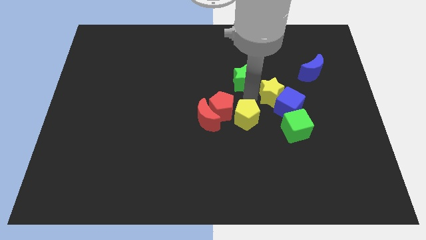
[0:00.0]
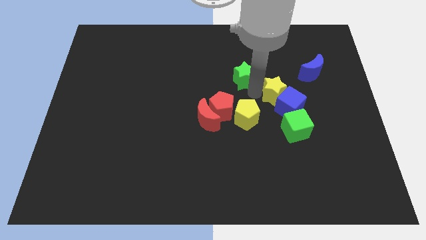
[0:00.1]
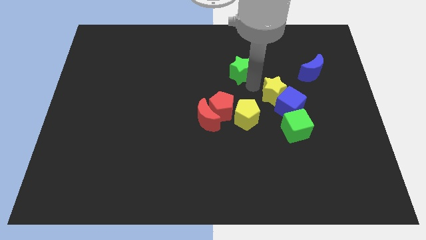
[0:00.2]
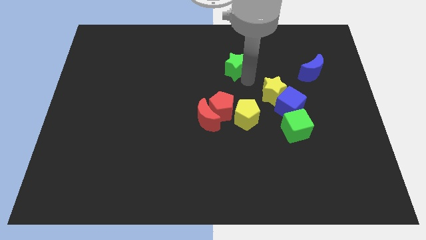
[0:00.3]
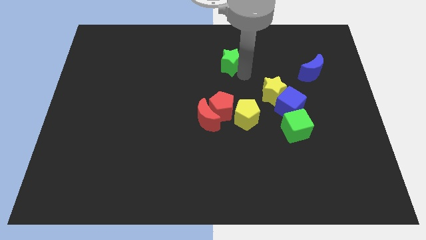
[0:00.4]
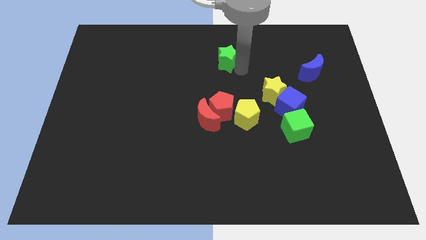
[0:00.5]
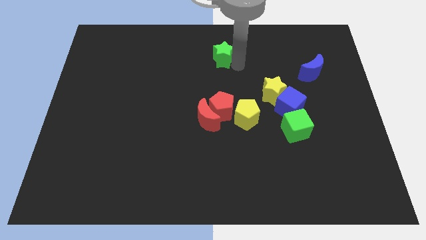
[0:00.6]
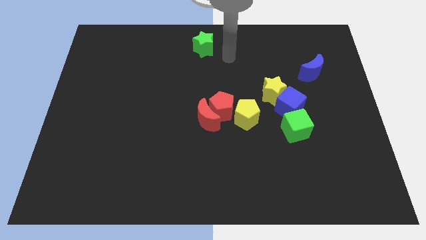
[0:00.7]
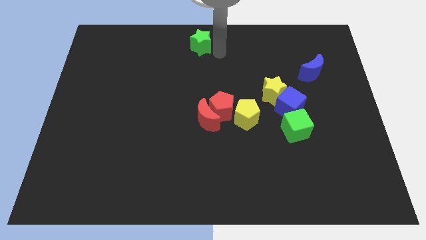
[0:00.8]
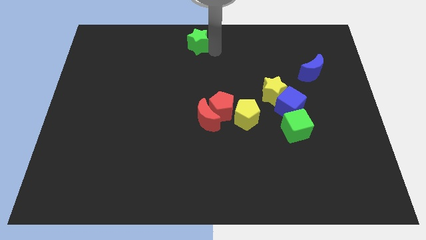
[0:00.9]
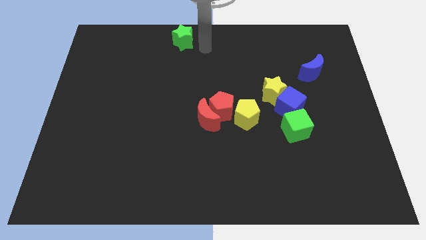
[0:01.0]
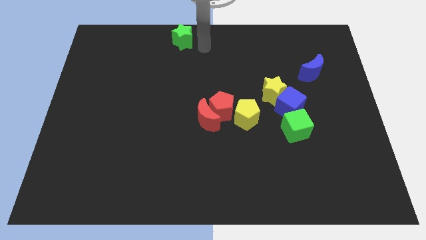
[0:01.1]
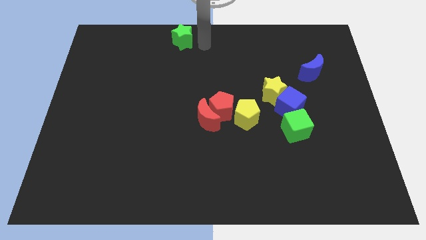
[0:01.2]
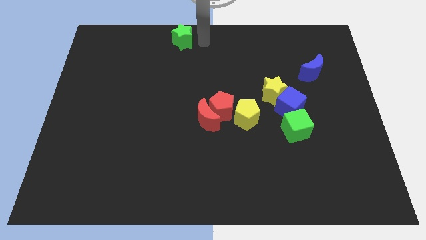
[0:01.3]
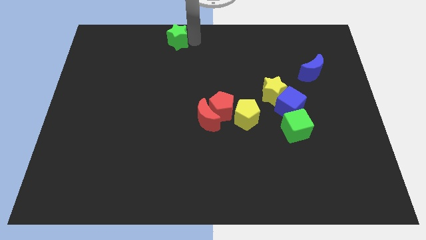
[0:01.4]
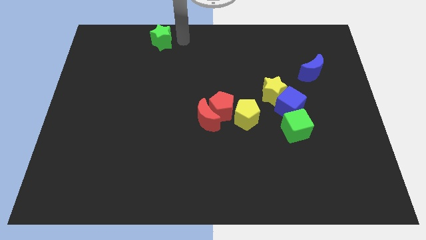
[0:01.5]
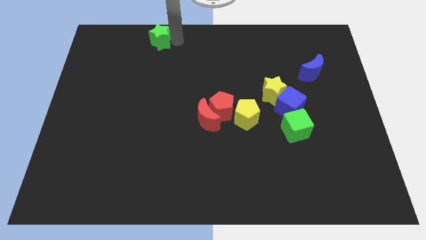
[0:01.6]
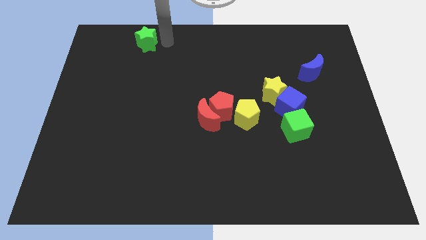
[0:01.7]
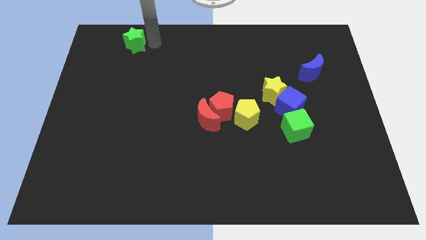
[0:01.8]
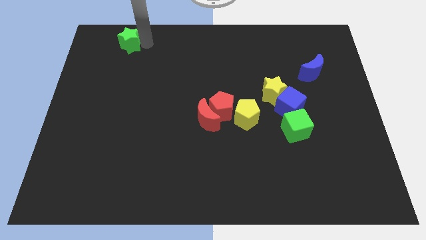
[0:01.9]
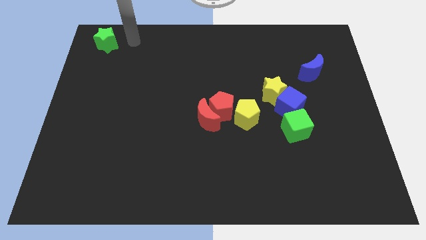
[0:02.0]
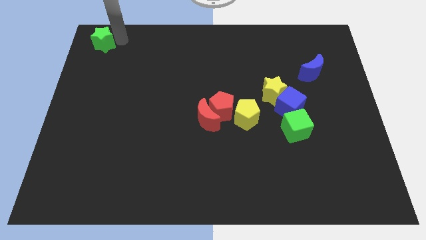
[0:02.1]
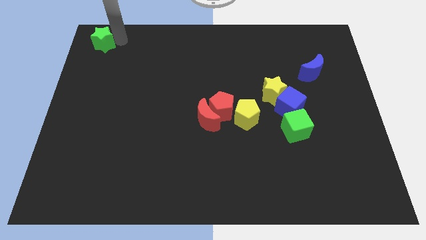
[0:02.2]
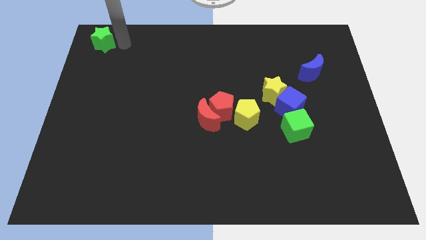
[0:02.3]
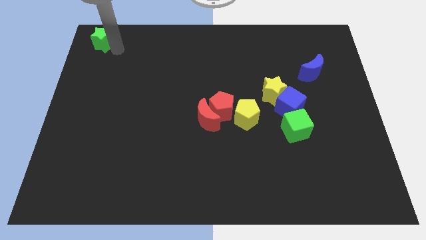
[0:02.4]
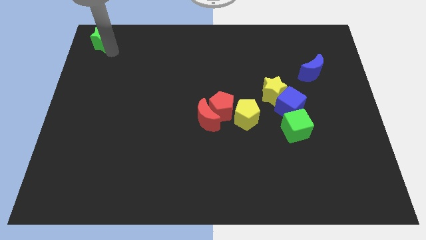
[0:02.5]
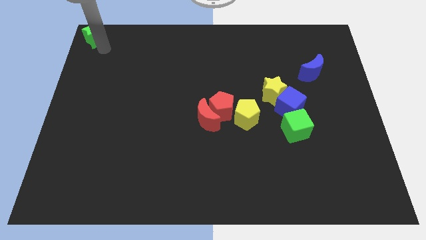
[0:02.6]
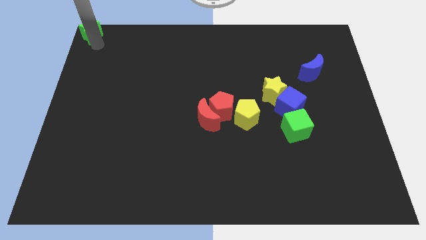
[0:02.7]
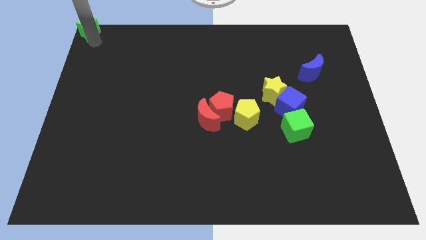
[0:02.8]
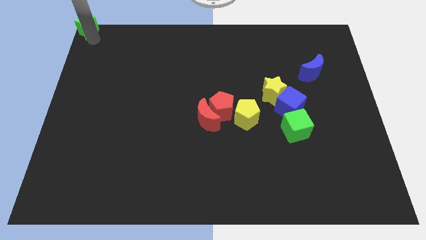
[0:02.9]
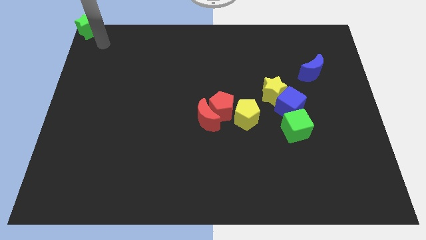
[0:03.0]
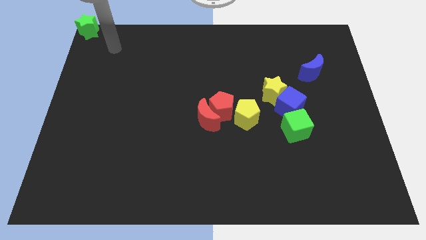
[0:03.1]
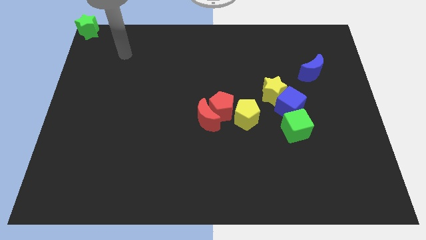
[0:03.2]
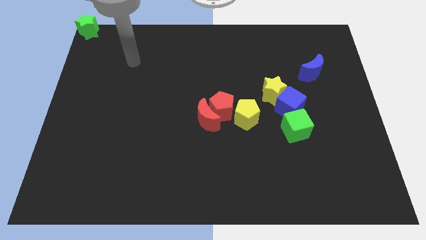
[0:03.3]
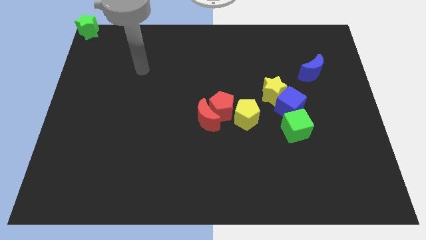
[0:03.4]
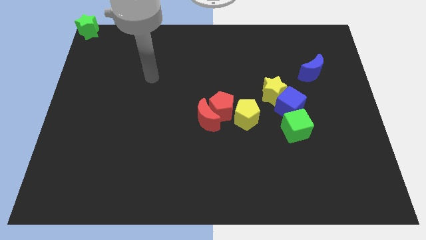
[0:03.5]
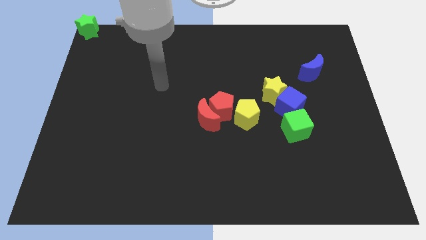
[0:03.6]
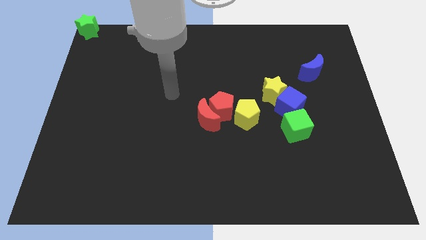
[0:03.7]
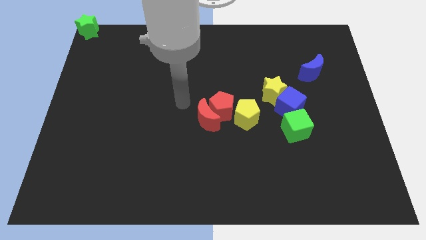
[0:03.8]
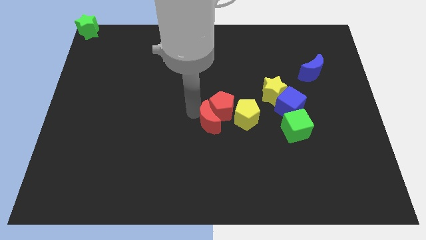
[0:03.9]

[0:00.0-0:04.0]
move the green star to the top left on the board

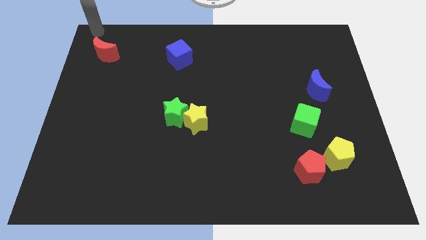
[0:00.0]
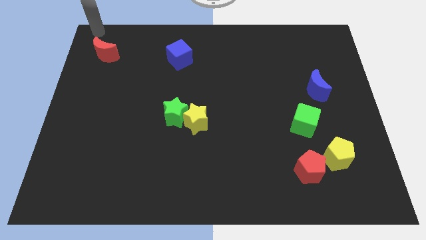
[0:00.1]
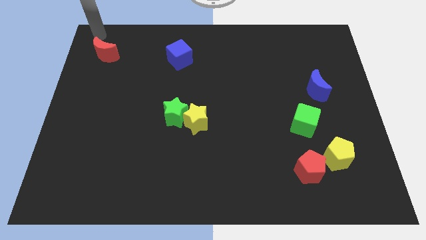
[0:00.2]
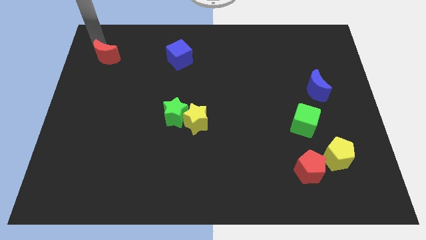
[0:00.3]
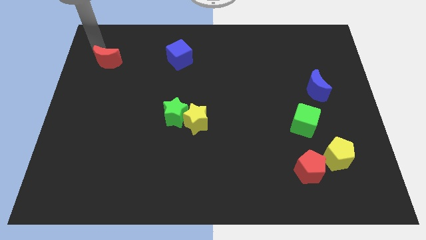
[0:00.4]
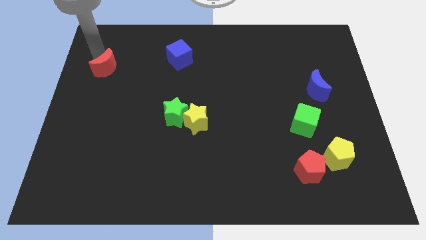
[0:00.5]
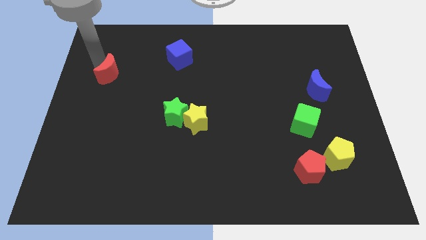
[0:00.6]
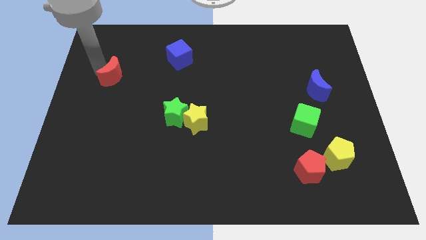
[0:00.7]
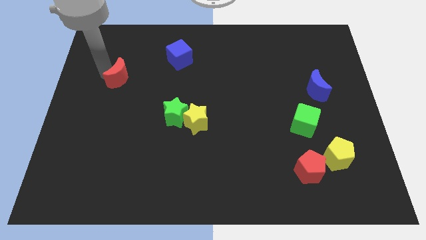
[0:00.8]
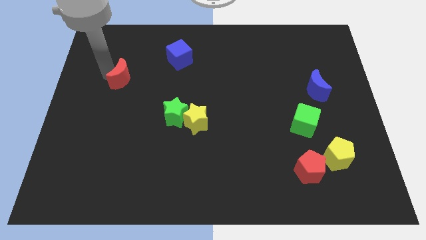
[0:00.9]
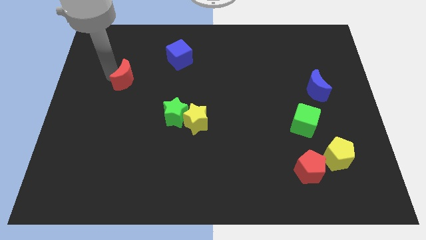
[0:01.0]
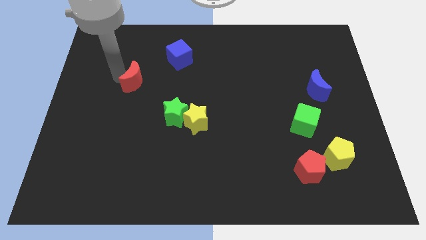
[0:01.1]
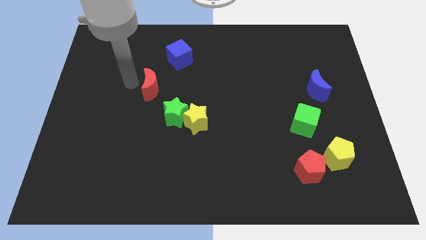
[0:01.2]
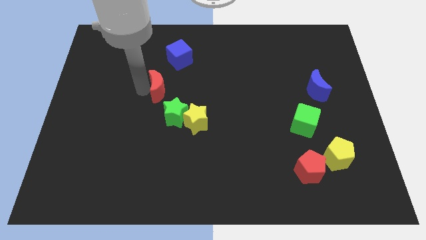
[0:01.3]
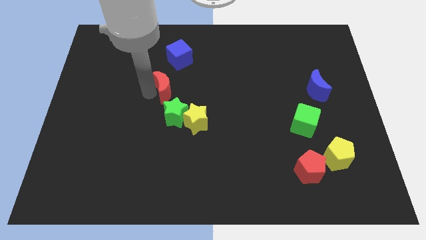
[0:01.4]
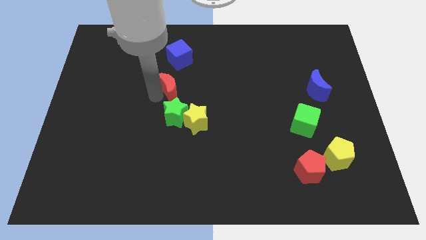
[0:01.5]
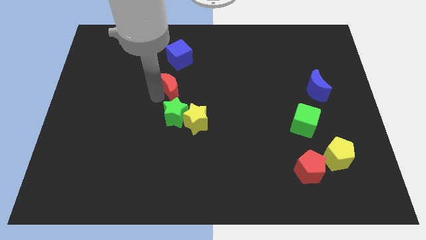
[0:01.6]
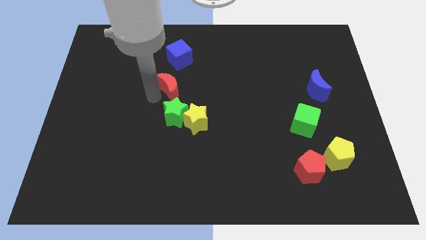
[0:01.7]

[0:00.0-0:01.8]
slide the red moon towards top side of the green star

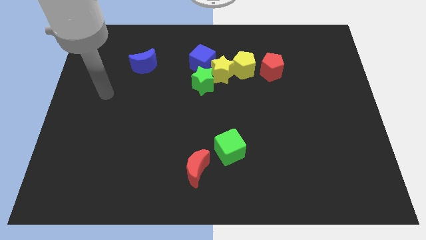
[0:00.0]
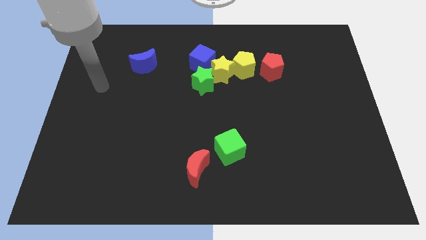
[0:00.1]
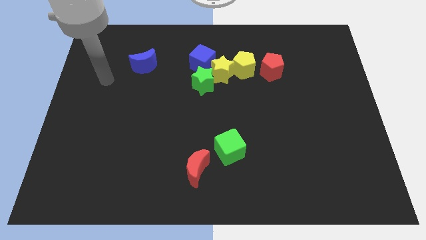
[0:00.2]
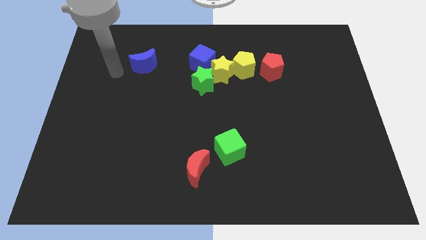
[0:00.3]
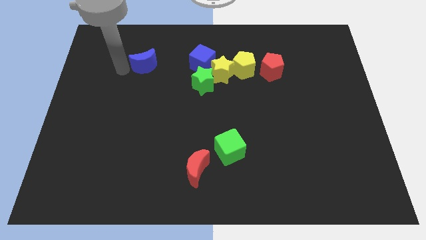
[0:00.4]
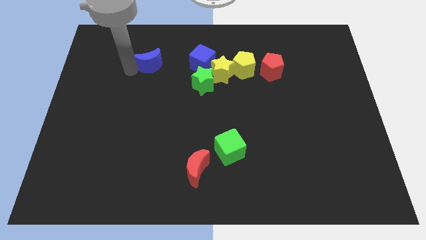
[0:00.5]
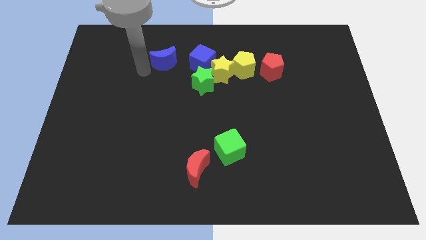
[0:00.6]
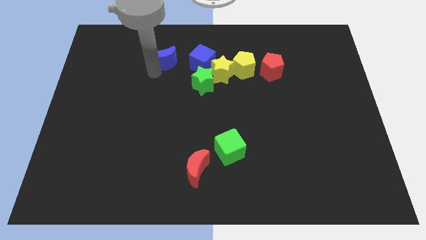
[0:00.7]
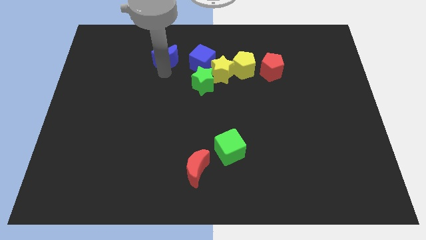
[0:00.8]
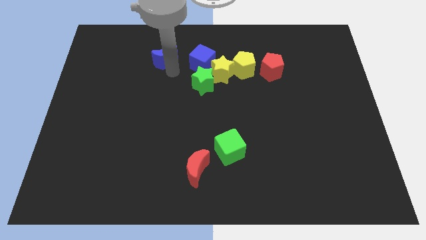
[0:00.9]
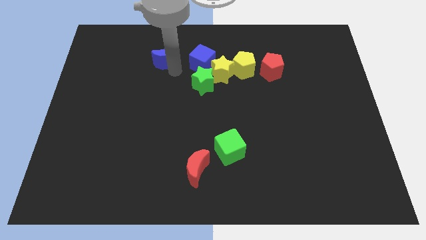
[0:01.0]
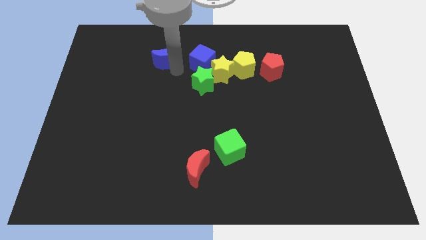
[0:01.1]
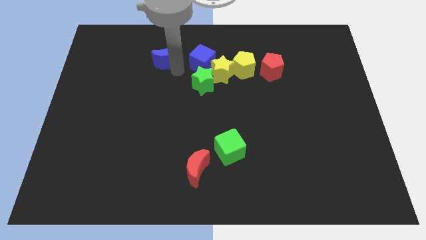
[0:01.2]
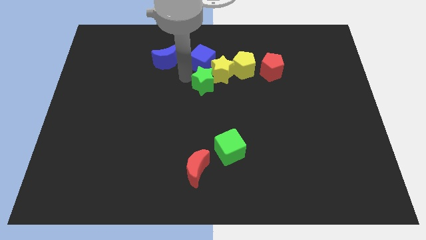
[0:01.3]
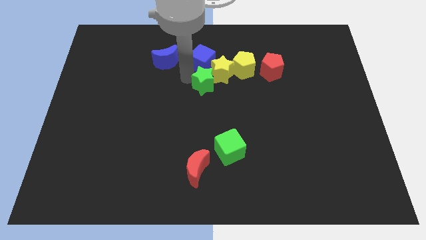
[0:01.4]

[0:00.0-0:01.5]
push the blue crescent towards the blue cube

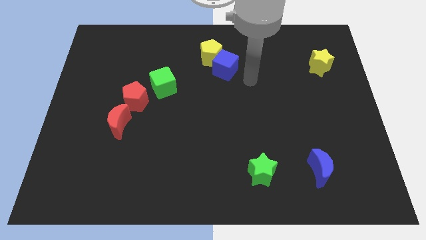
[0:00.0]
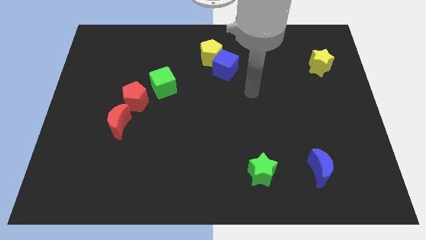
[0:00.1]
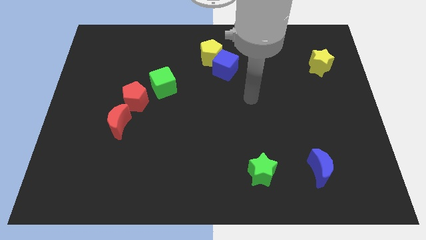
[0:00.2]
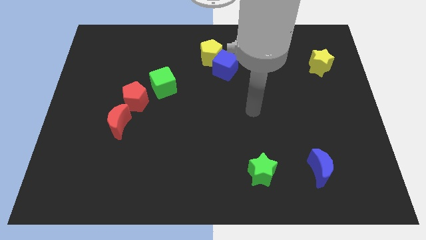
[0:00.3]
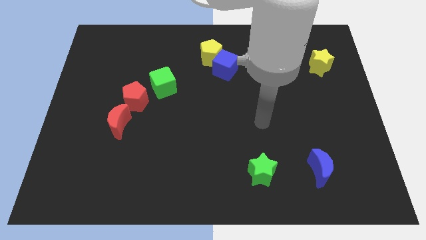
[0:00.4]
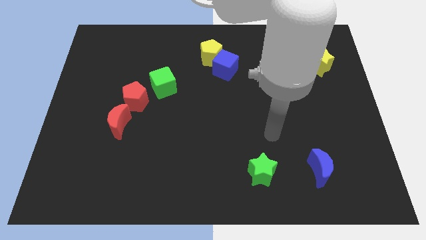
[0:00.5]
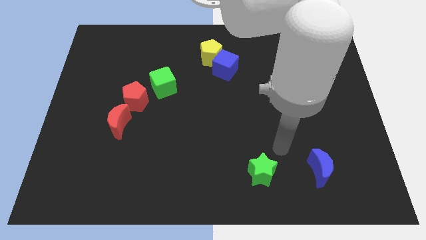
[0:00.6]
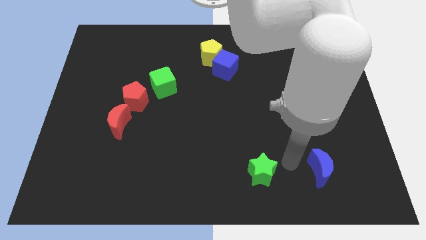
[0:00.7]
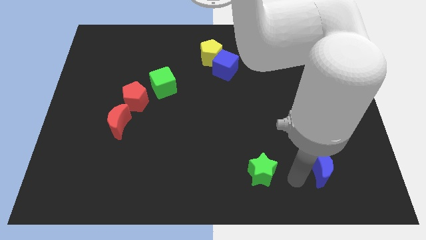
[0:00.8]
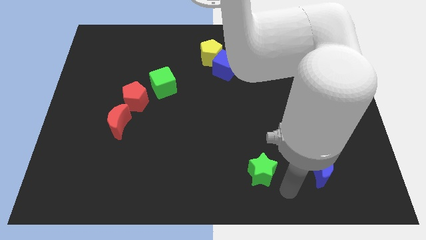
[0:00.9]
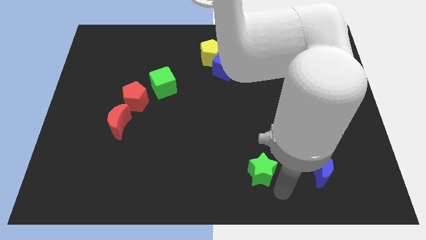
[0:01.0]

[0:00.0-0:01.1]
place your arm to the bottom right to the green star

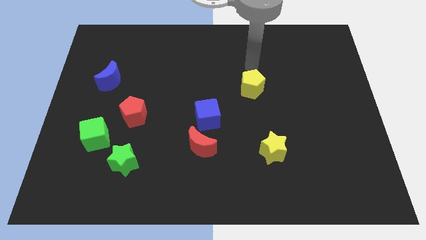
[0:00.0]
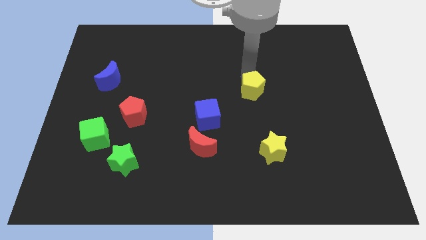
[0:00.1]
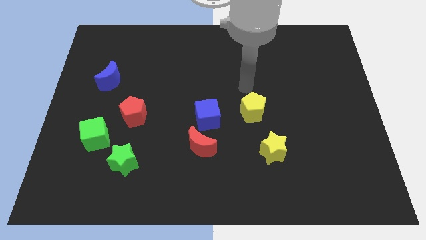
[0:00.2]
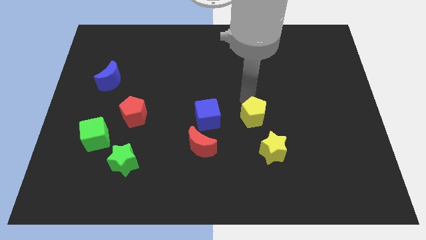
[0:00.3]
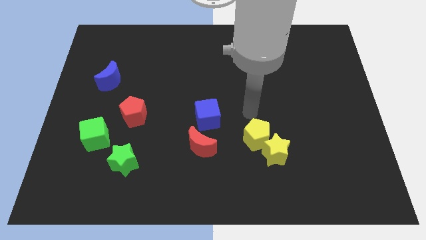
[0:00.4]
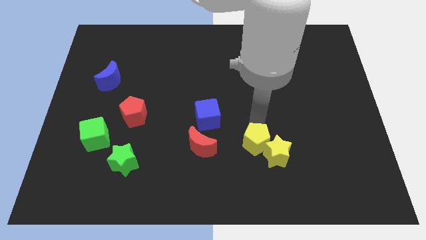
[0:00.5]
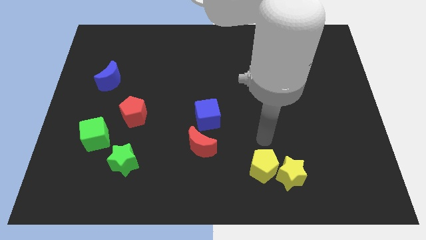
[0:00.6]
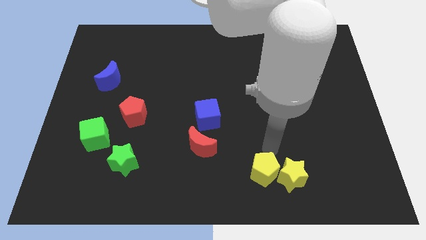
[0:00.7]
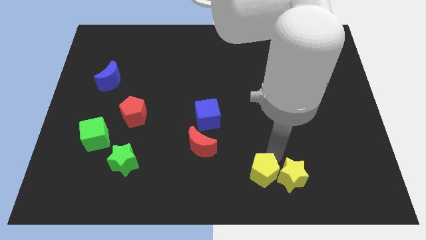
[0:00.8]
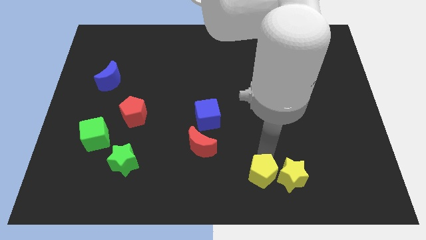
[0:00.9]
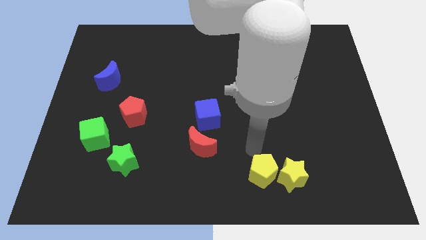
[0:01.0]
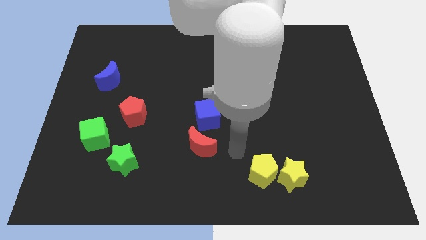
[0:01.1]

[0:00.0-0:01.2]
push the yellow pentagon close to the yellow star
